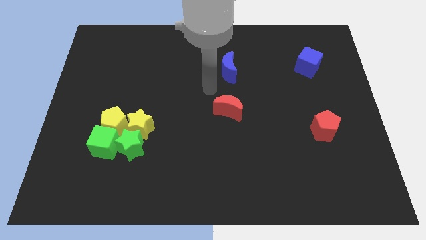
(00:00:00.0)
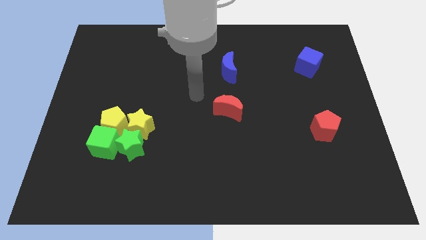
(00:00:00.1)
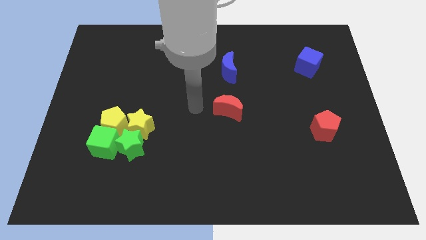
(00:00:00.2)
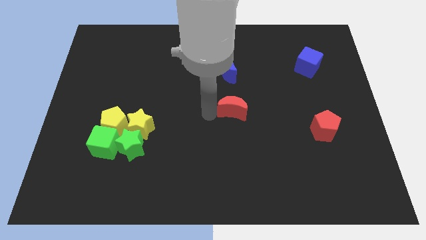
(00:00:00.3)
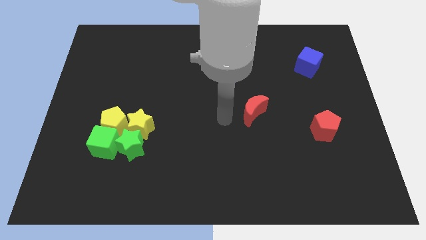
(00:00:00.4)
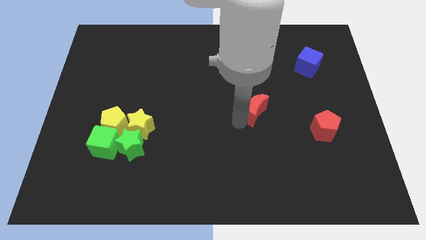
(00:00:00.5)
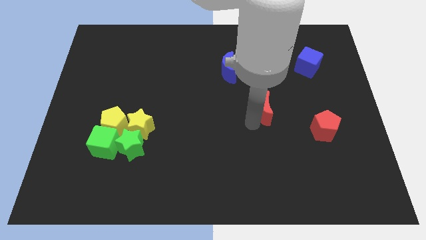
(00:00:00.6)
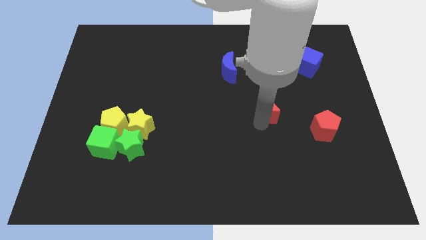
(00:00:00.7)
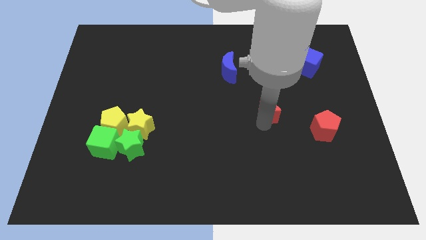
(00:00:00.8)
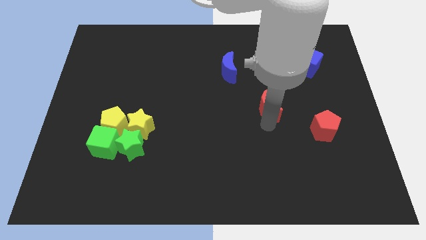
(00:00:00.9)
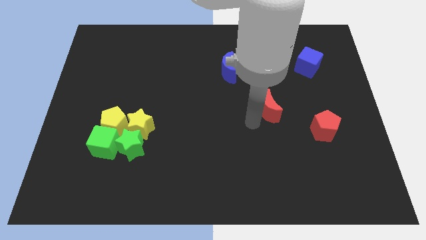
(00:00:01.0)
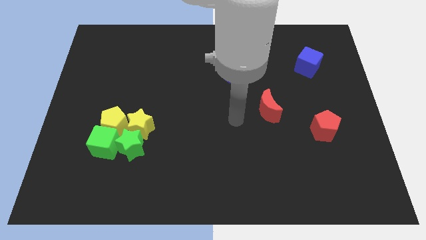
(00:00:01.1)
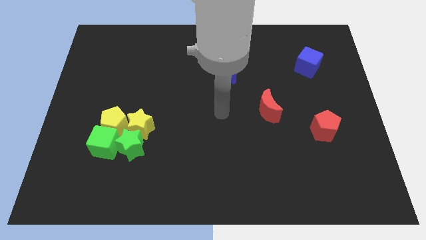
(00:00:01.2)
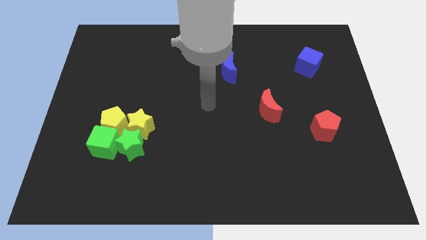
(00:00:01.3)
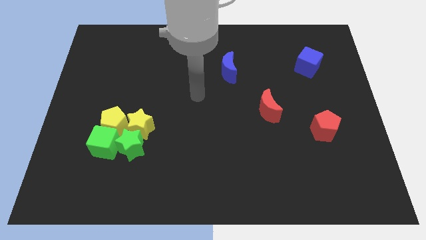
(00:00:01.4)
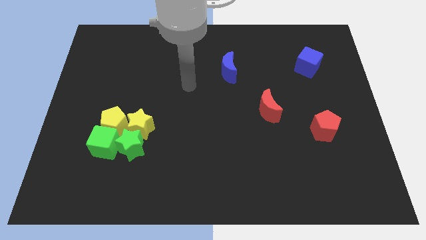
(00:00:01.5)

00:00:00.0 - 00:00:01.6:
push the red moon diagonally to the blue cube

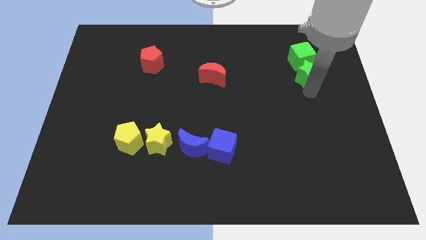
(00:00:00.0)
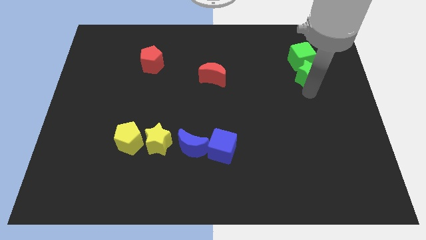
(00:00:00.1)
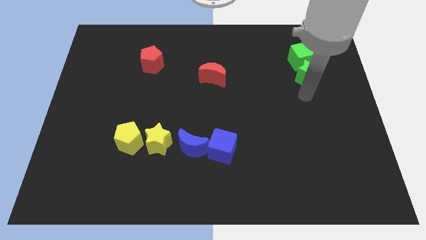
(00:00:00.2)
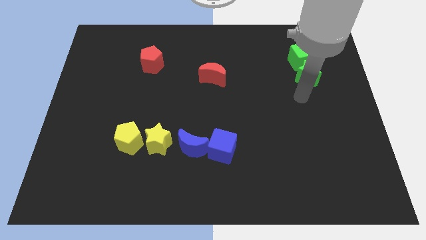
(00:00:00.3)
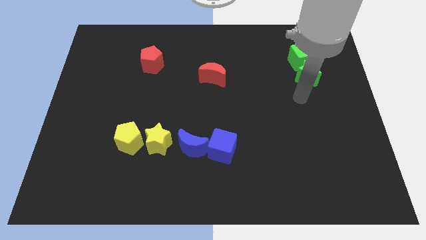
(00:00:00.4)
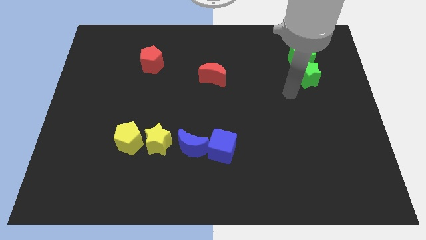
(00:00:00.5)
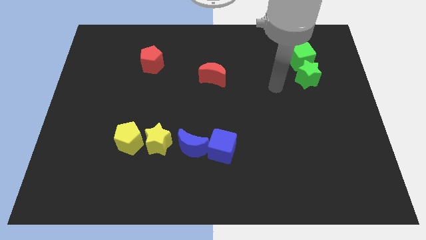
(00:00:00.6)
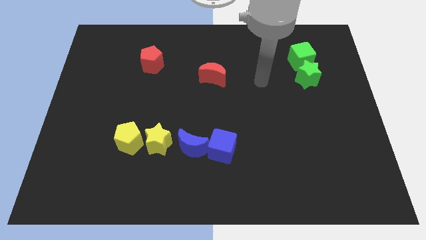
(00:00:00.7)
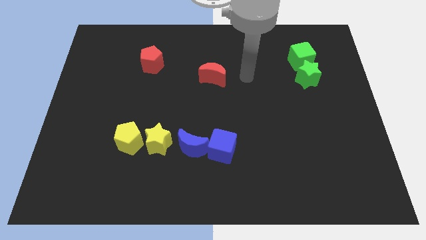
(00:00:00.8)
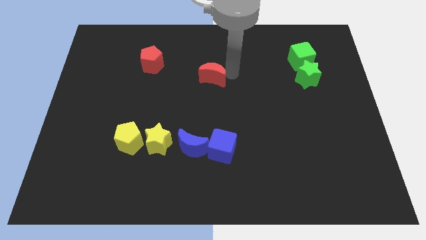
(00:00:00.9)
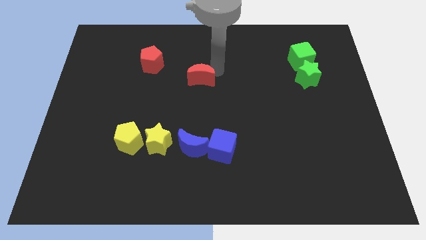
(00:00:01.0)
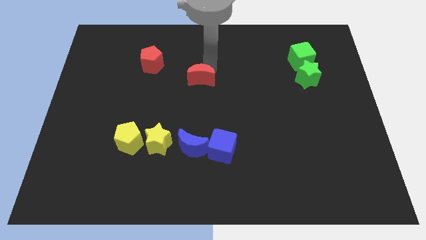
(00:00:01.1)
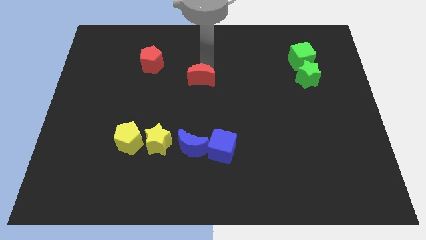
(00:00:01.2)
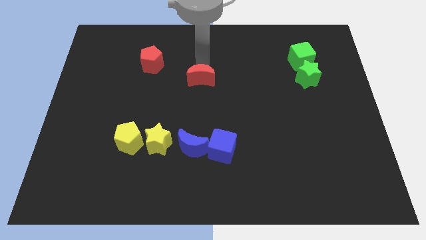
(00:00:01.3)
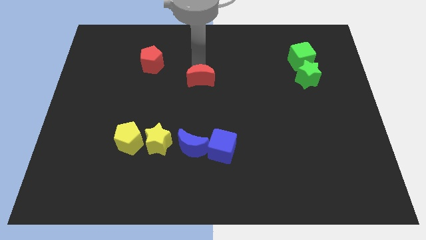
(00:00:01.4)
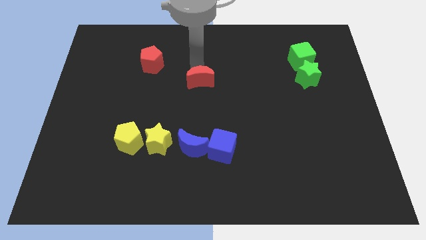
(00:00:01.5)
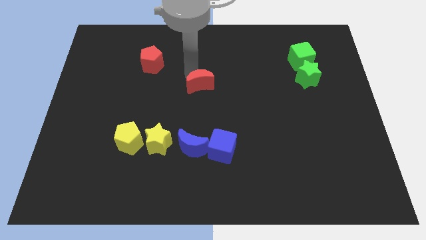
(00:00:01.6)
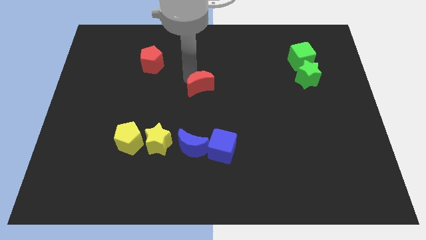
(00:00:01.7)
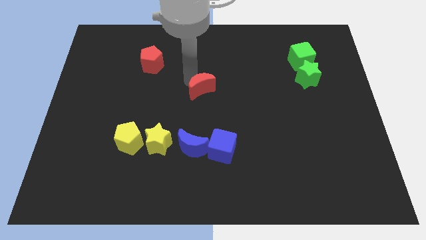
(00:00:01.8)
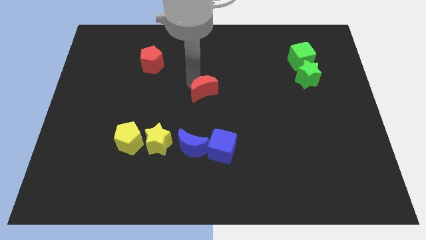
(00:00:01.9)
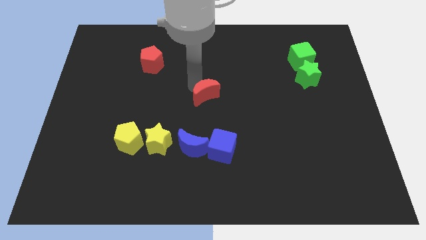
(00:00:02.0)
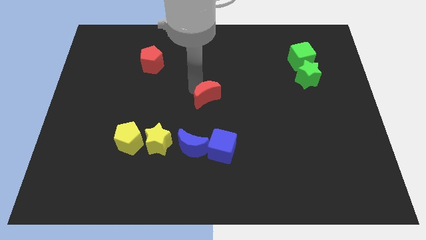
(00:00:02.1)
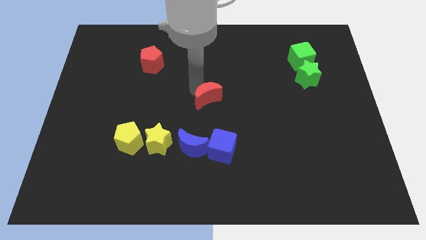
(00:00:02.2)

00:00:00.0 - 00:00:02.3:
push red moon downwards

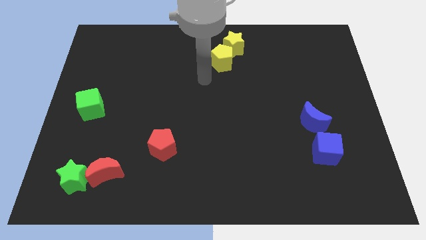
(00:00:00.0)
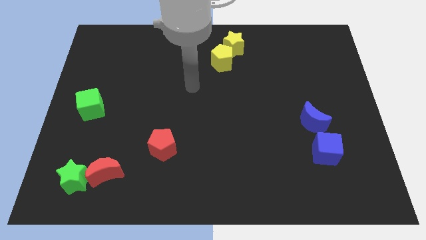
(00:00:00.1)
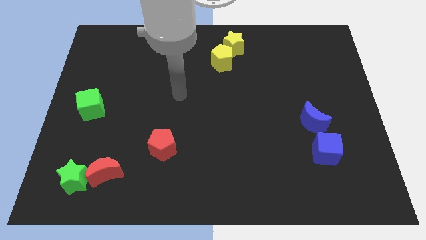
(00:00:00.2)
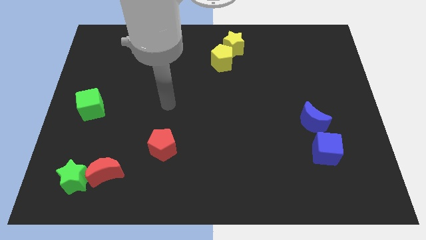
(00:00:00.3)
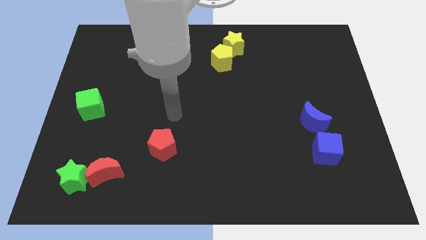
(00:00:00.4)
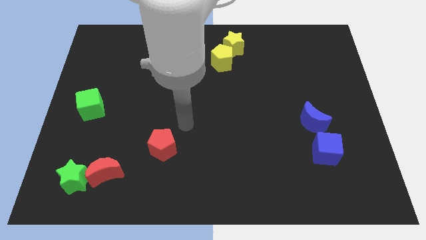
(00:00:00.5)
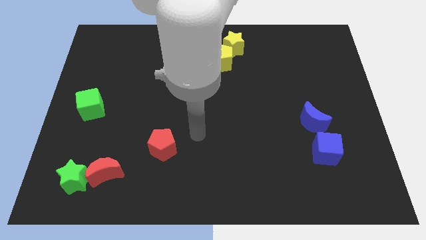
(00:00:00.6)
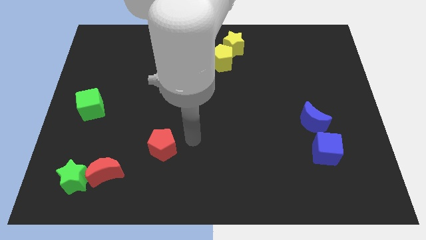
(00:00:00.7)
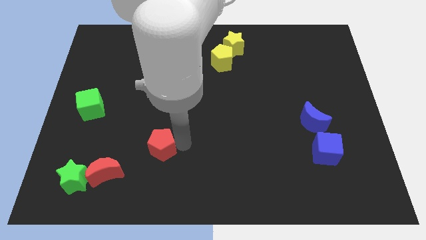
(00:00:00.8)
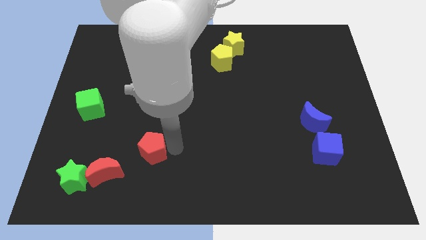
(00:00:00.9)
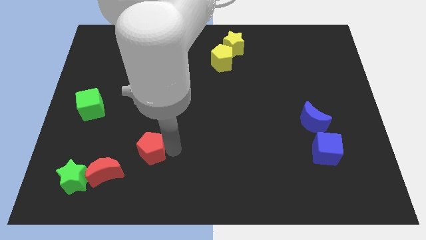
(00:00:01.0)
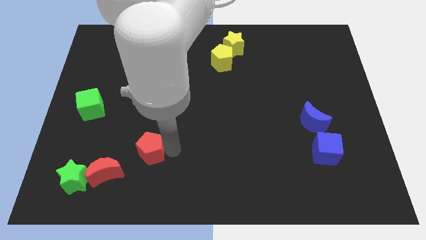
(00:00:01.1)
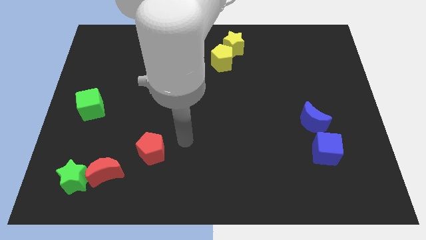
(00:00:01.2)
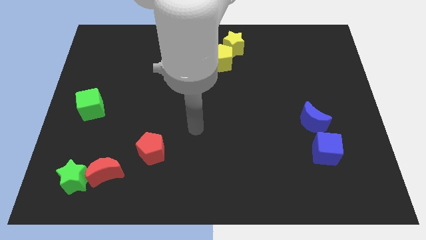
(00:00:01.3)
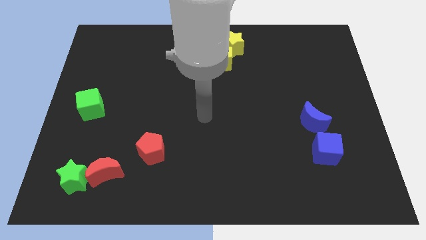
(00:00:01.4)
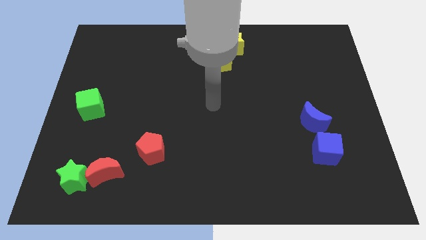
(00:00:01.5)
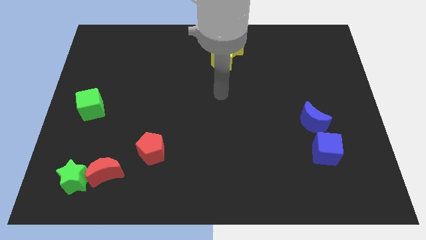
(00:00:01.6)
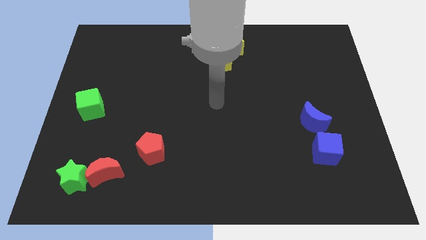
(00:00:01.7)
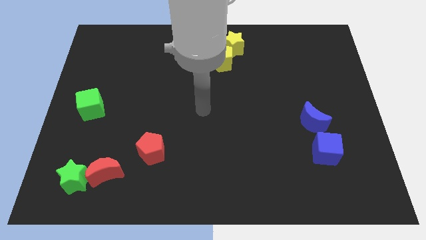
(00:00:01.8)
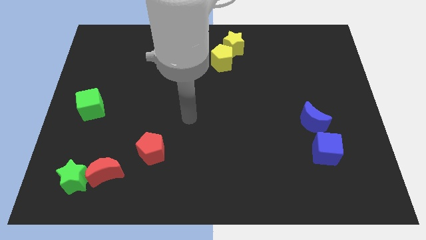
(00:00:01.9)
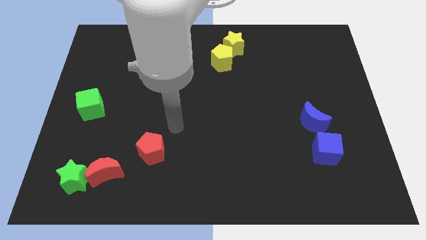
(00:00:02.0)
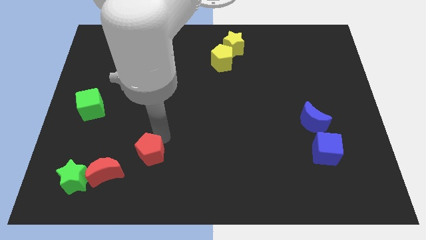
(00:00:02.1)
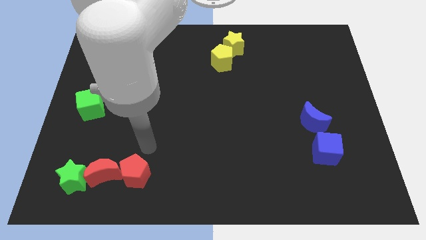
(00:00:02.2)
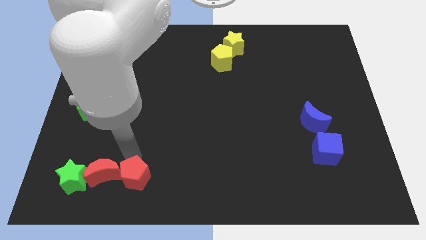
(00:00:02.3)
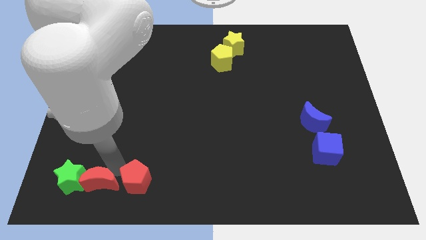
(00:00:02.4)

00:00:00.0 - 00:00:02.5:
place the red pentagon right of the red moon

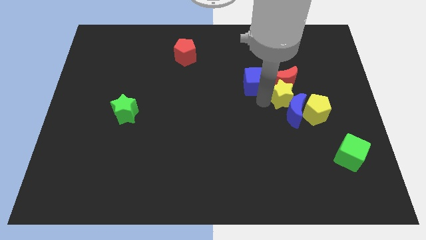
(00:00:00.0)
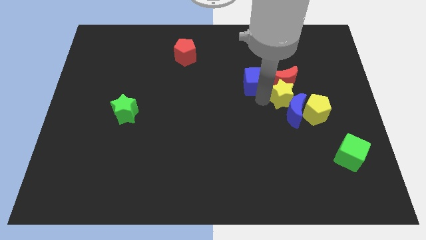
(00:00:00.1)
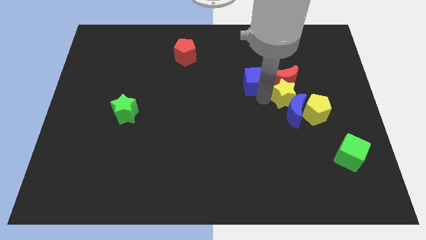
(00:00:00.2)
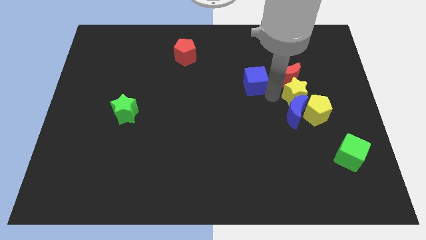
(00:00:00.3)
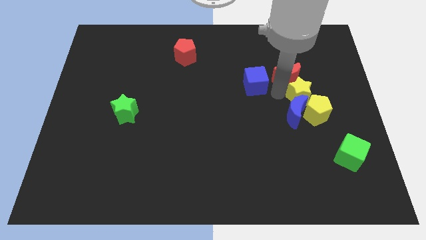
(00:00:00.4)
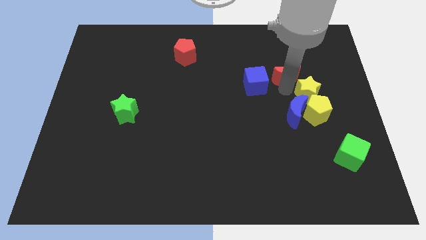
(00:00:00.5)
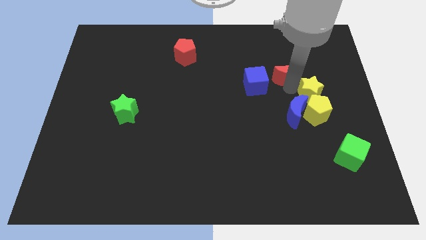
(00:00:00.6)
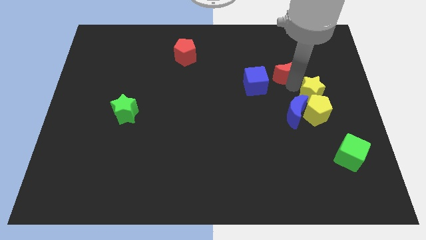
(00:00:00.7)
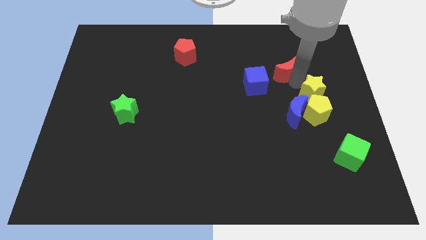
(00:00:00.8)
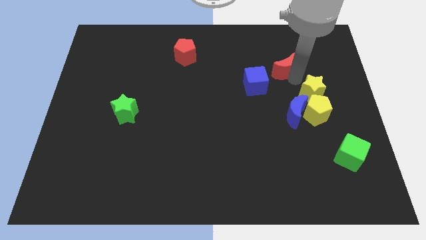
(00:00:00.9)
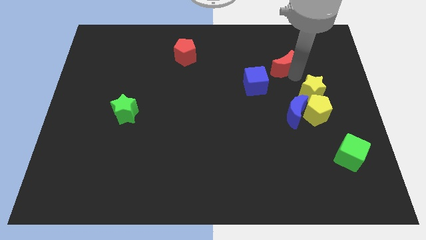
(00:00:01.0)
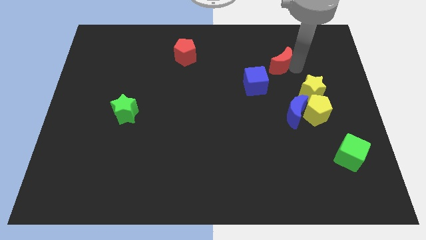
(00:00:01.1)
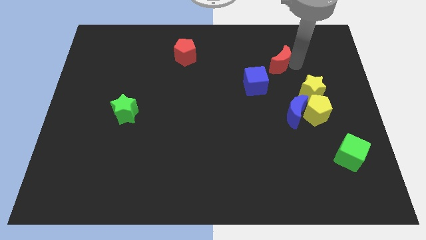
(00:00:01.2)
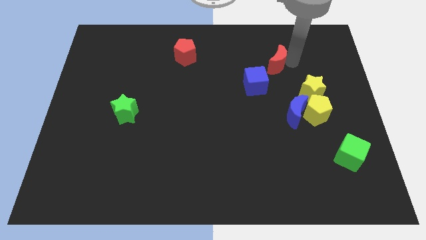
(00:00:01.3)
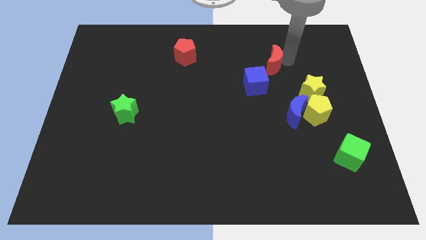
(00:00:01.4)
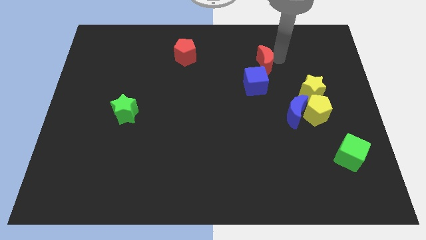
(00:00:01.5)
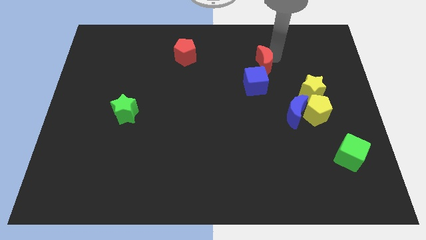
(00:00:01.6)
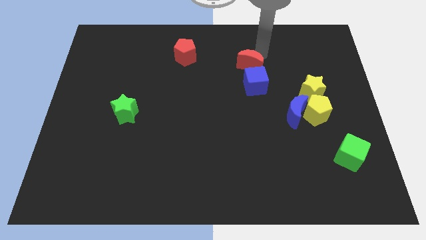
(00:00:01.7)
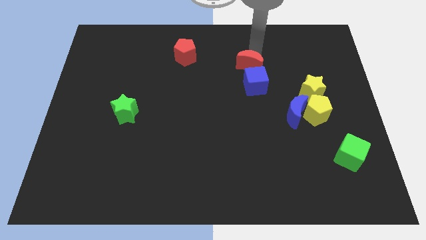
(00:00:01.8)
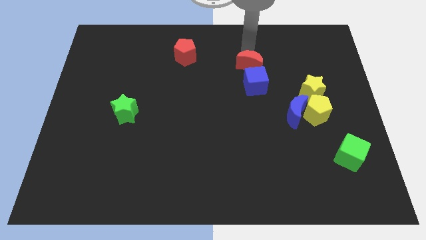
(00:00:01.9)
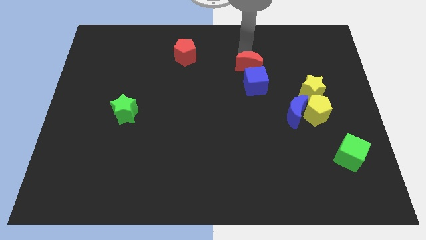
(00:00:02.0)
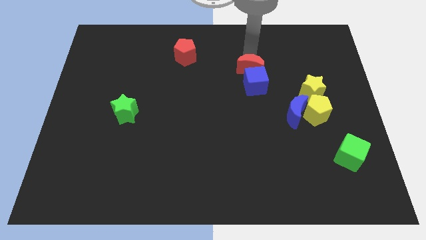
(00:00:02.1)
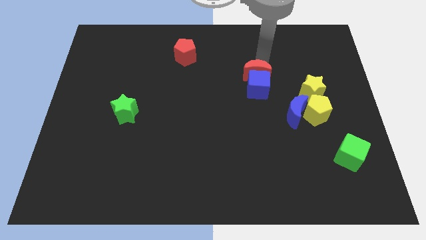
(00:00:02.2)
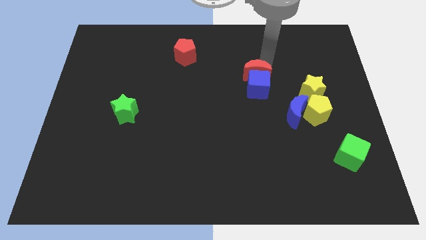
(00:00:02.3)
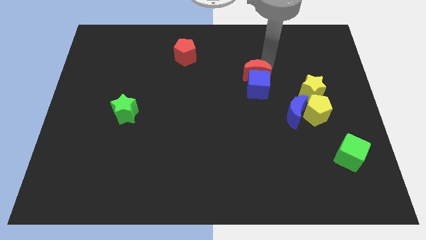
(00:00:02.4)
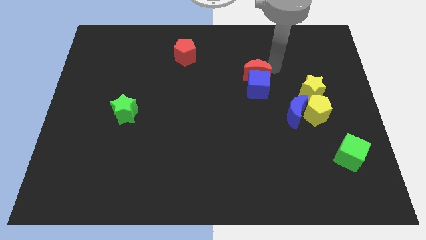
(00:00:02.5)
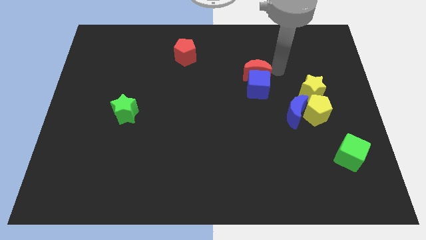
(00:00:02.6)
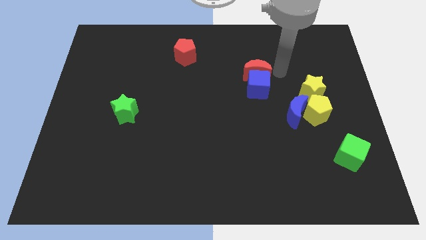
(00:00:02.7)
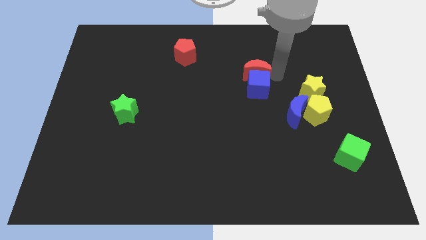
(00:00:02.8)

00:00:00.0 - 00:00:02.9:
place red crescent on top of blue cube
